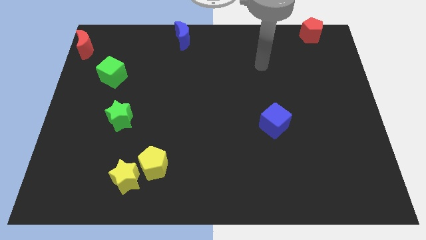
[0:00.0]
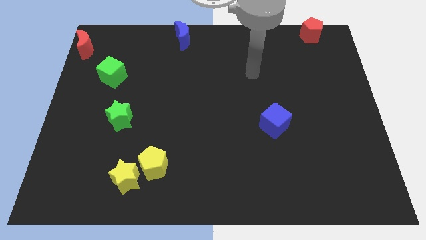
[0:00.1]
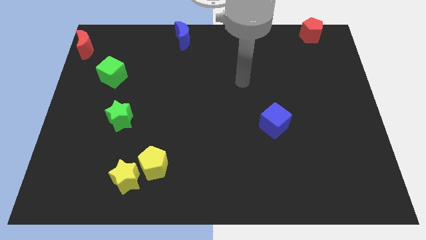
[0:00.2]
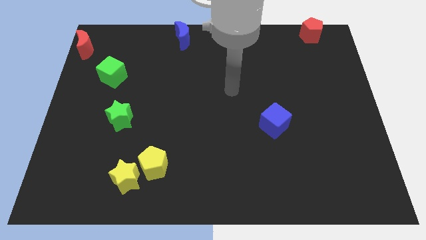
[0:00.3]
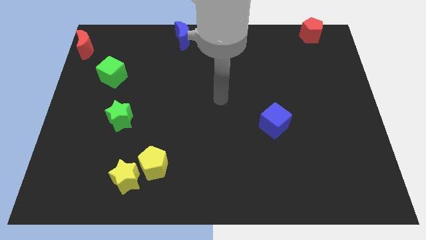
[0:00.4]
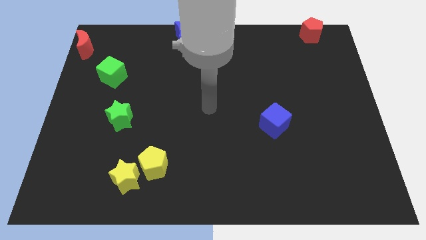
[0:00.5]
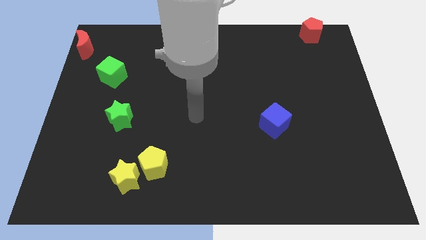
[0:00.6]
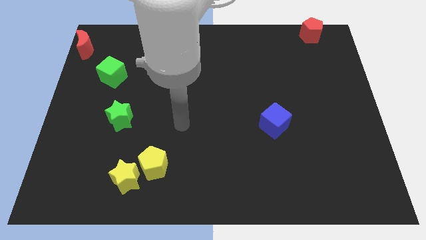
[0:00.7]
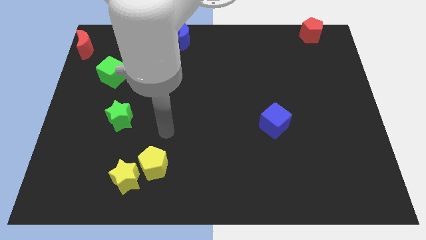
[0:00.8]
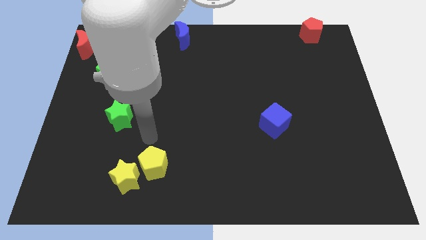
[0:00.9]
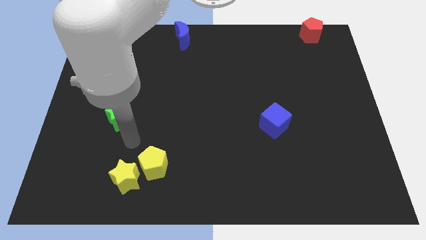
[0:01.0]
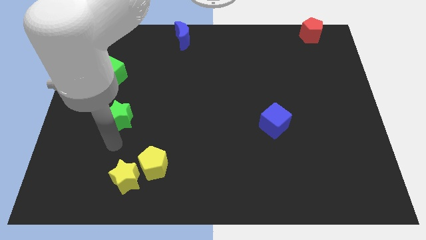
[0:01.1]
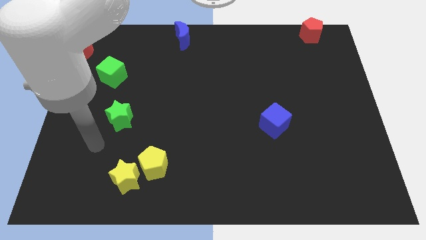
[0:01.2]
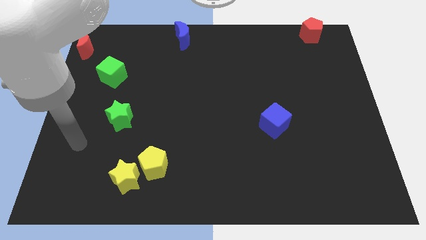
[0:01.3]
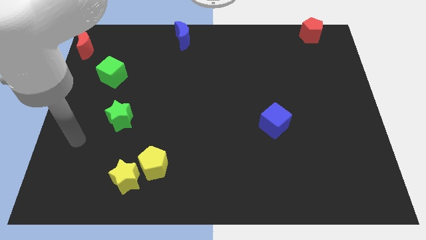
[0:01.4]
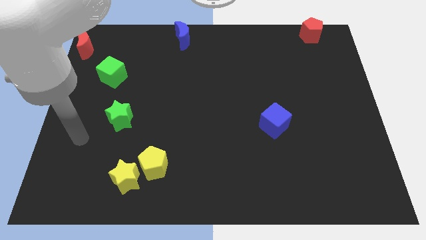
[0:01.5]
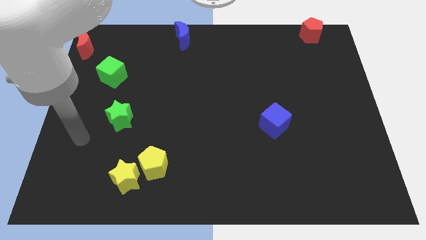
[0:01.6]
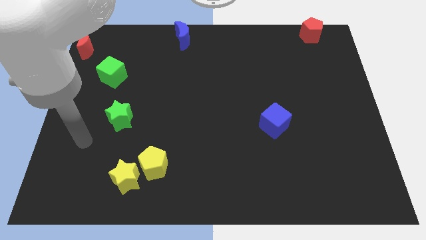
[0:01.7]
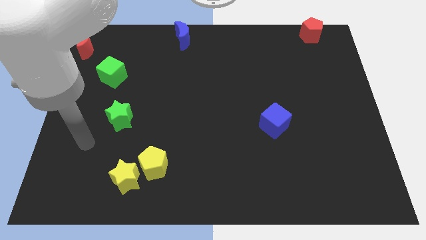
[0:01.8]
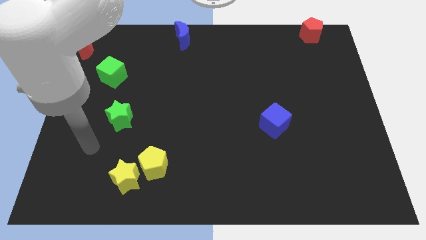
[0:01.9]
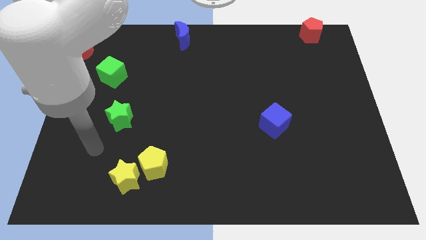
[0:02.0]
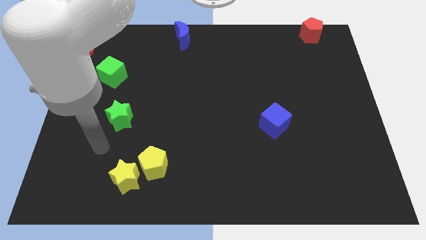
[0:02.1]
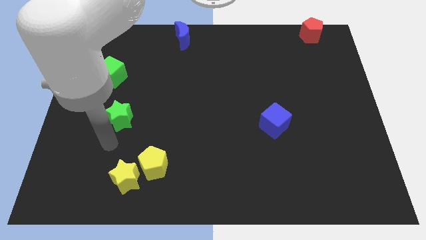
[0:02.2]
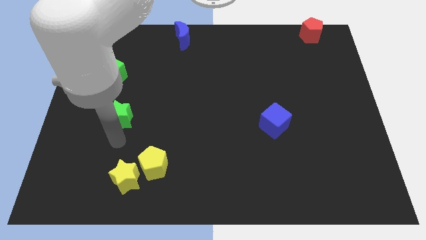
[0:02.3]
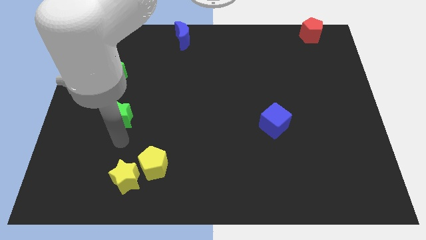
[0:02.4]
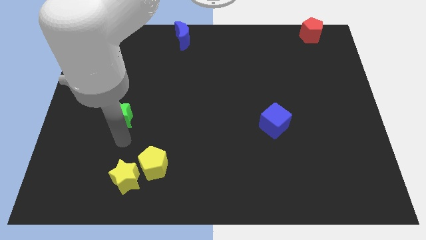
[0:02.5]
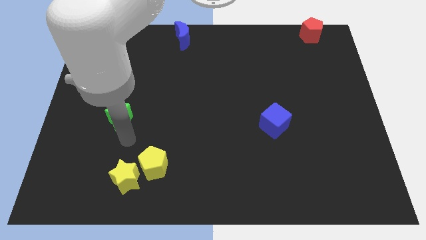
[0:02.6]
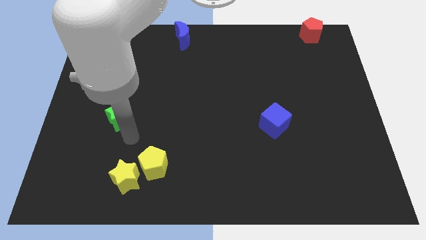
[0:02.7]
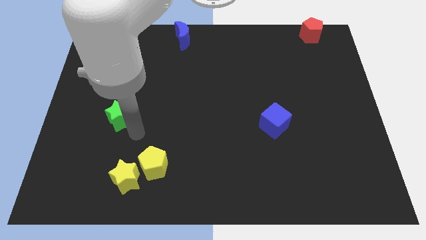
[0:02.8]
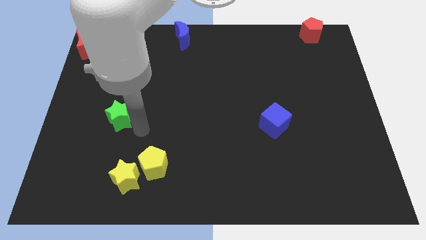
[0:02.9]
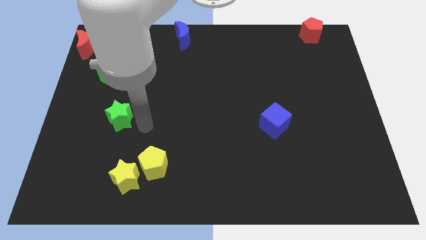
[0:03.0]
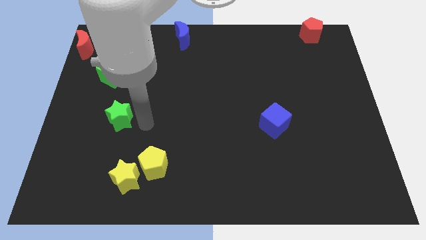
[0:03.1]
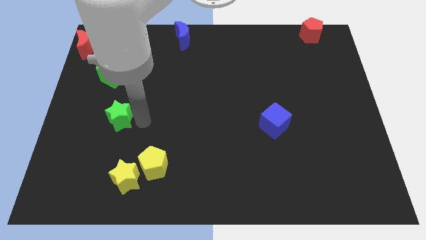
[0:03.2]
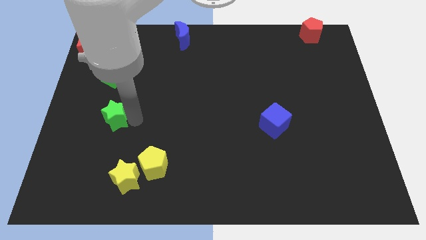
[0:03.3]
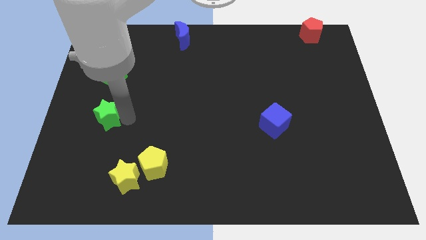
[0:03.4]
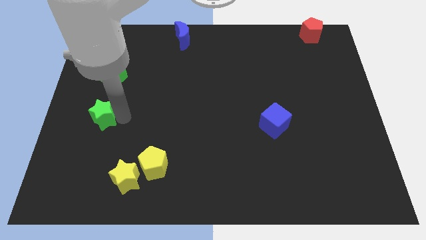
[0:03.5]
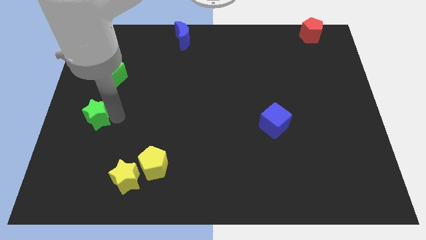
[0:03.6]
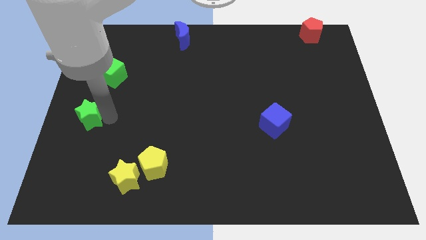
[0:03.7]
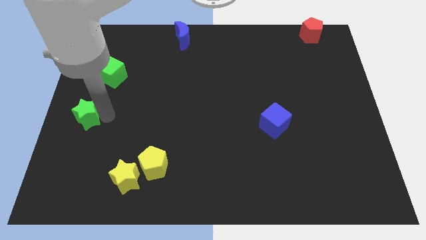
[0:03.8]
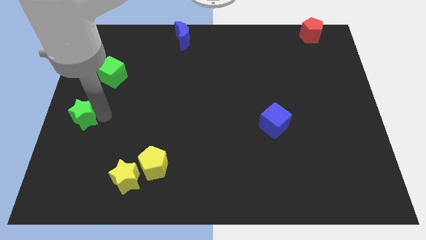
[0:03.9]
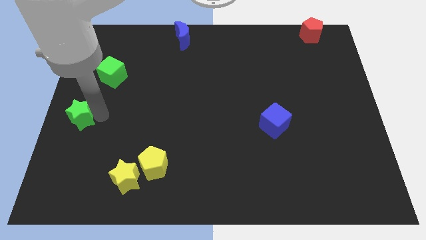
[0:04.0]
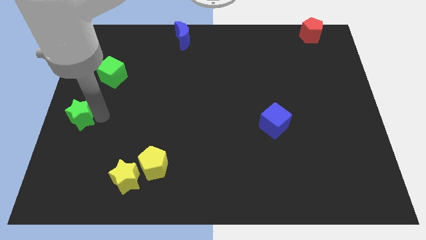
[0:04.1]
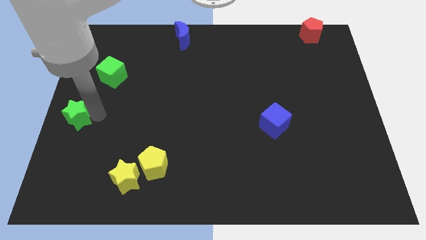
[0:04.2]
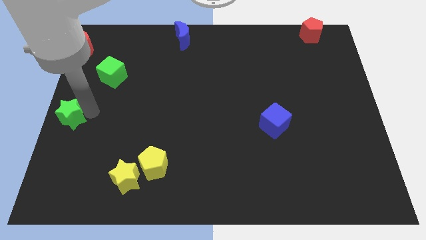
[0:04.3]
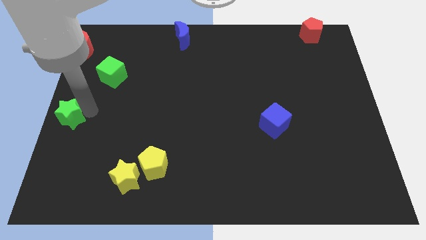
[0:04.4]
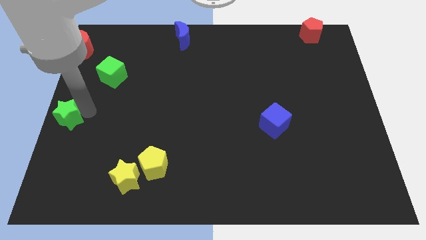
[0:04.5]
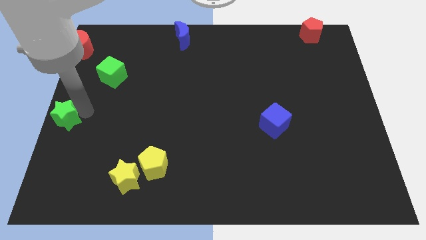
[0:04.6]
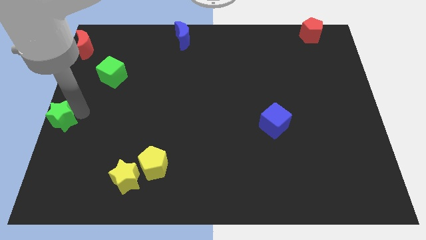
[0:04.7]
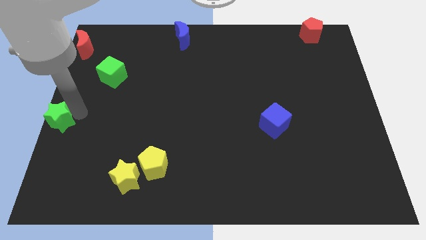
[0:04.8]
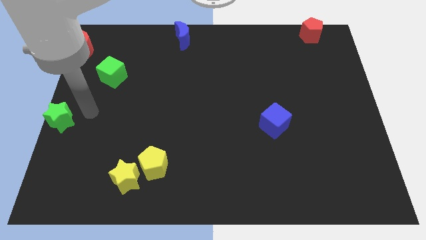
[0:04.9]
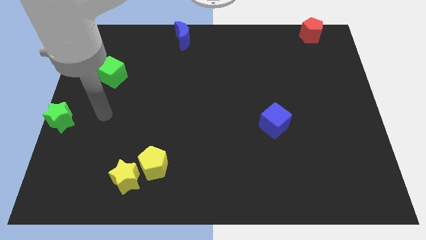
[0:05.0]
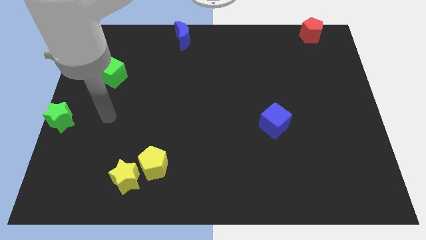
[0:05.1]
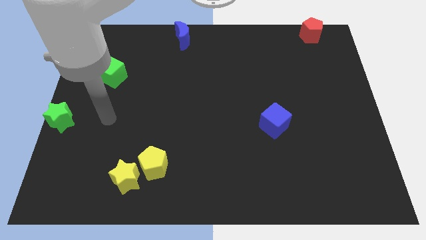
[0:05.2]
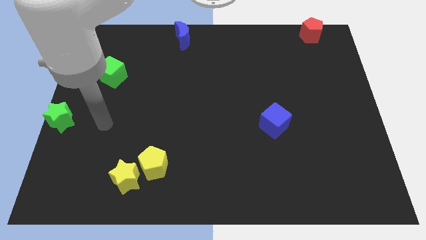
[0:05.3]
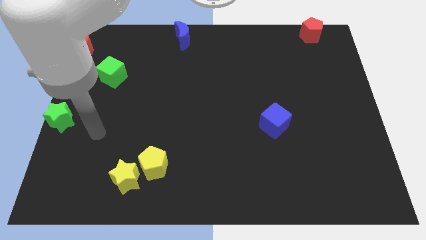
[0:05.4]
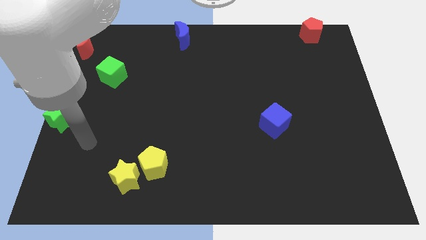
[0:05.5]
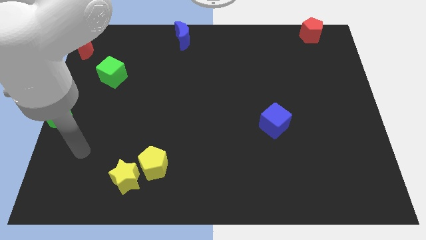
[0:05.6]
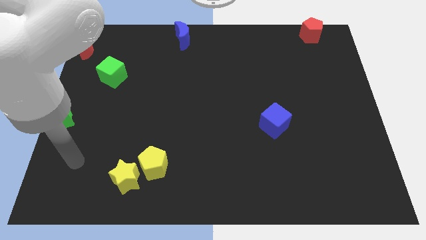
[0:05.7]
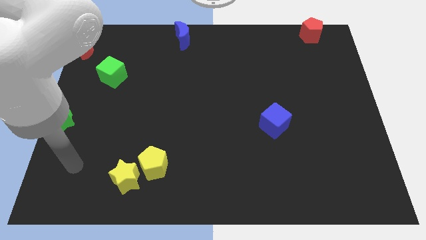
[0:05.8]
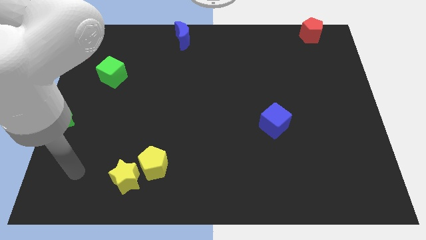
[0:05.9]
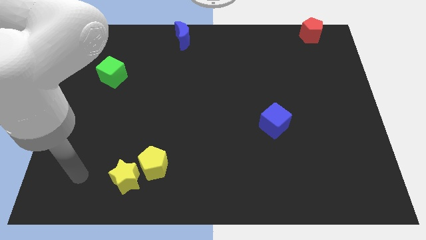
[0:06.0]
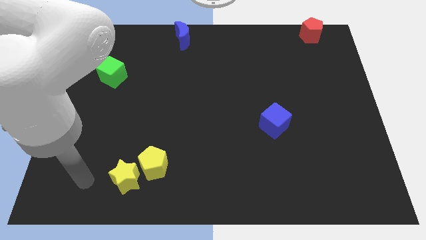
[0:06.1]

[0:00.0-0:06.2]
place the green star above the yellow star

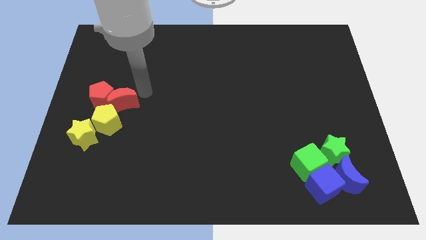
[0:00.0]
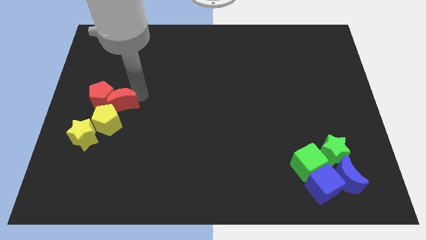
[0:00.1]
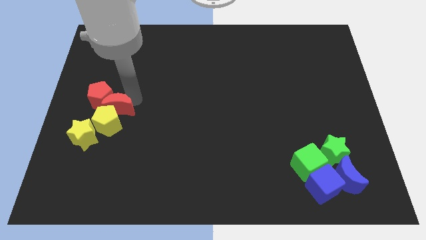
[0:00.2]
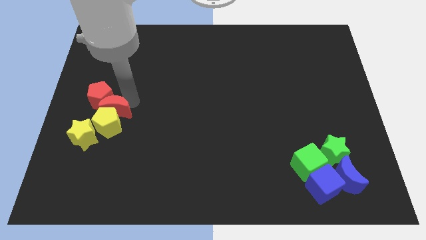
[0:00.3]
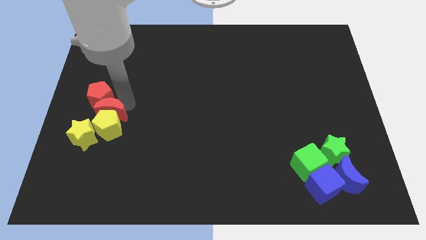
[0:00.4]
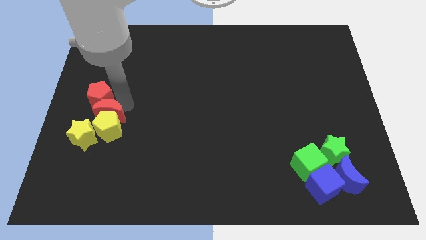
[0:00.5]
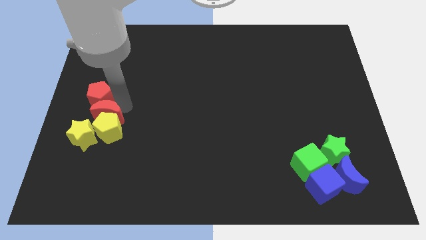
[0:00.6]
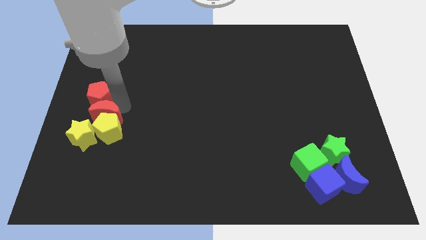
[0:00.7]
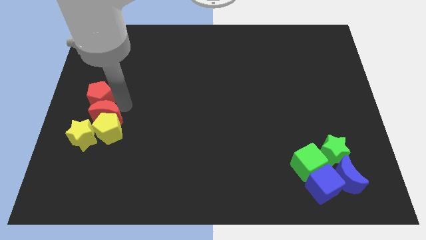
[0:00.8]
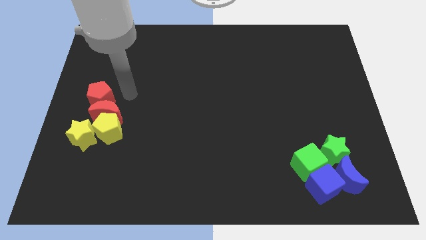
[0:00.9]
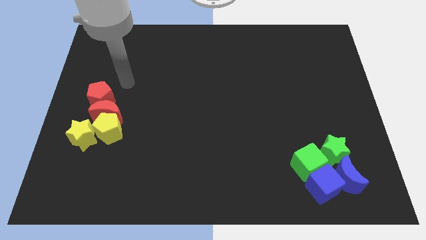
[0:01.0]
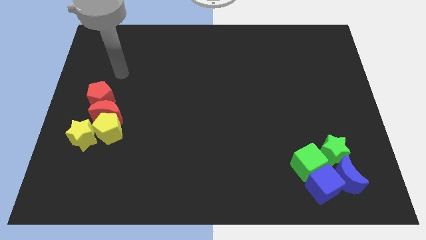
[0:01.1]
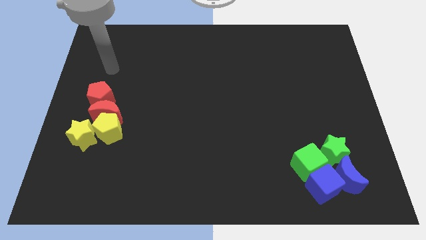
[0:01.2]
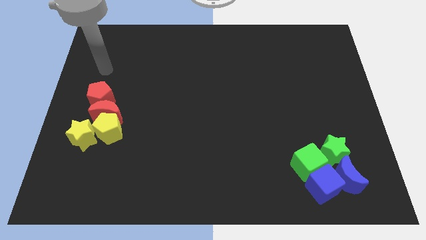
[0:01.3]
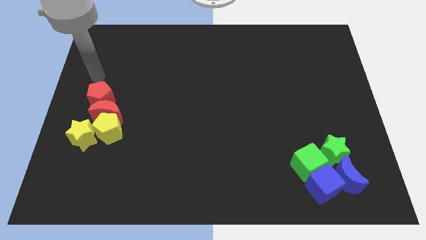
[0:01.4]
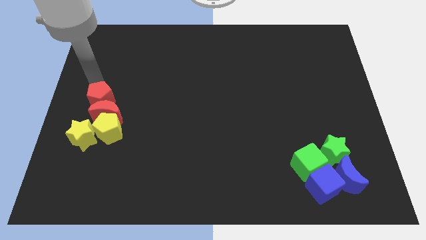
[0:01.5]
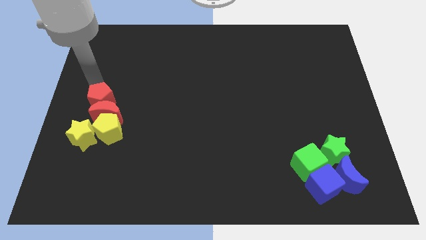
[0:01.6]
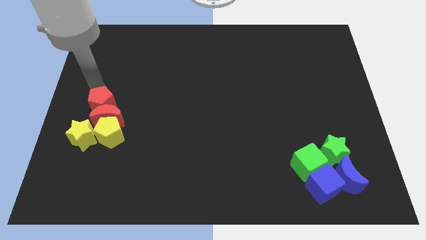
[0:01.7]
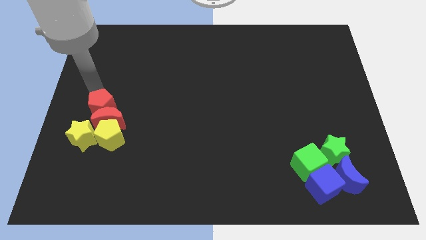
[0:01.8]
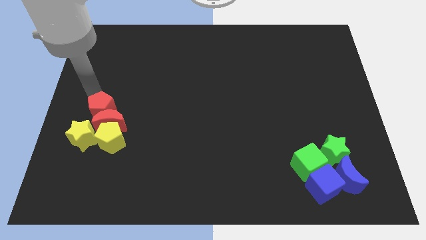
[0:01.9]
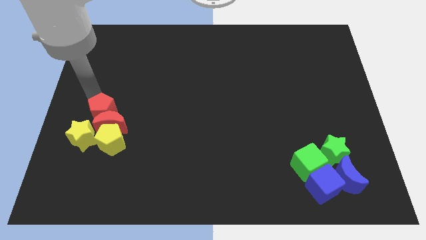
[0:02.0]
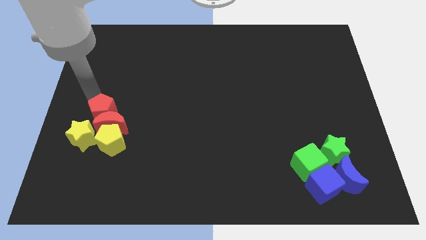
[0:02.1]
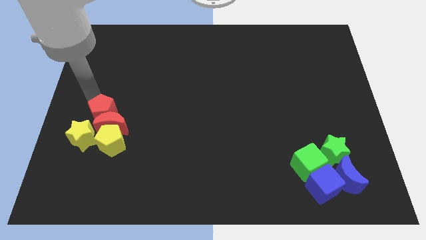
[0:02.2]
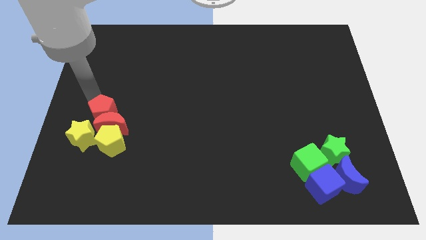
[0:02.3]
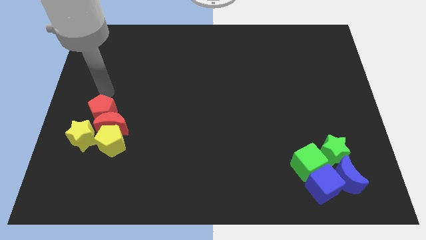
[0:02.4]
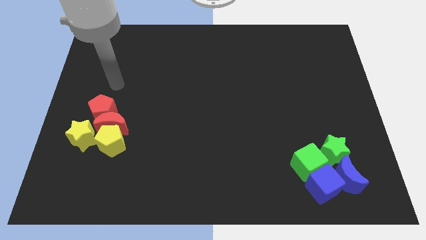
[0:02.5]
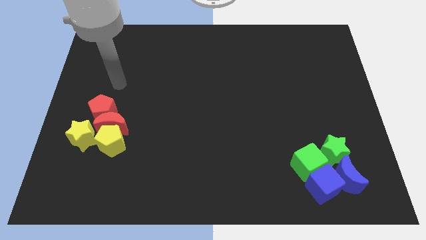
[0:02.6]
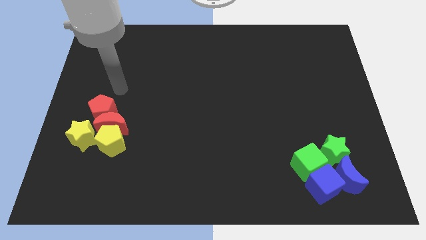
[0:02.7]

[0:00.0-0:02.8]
push the red pentagon to the bottom of board
